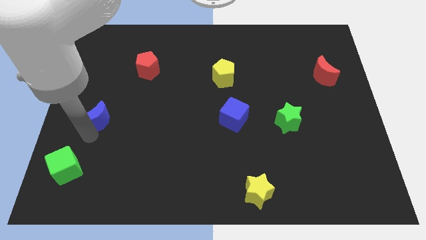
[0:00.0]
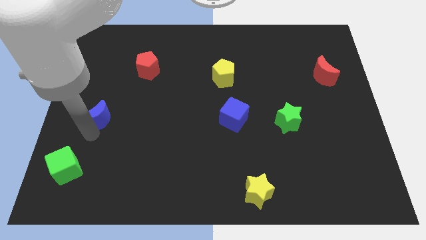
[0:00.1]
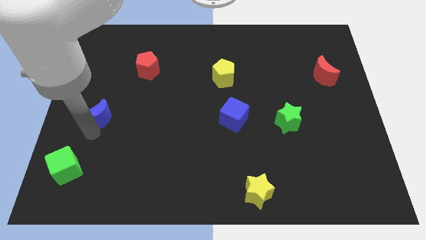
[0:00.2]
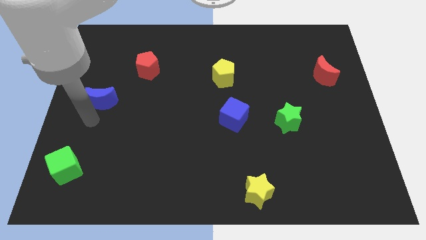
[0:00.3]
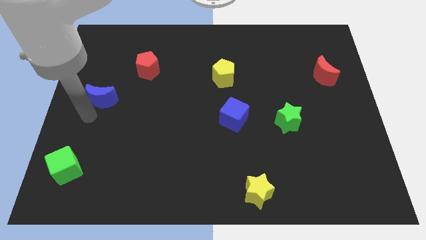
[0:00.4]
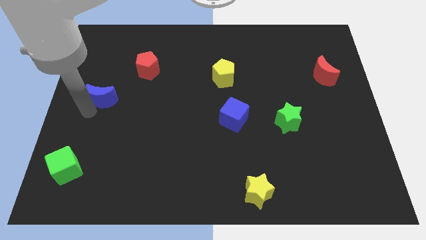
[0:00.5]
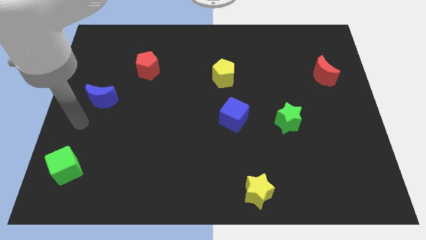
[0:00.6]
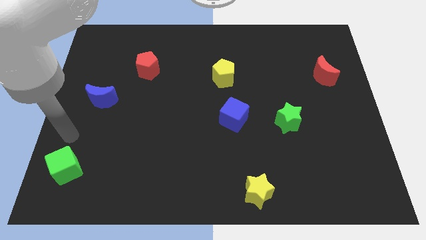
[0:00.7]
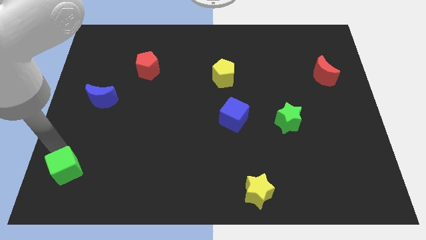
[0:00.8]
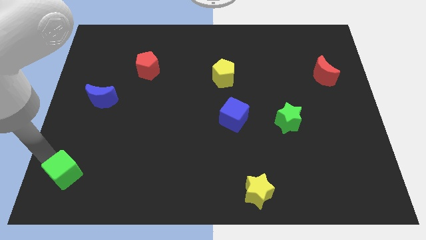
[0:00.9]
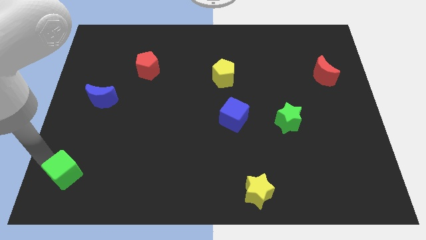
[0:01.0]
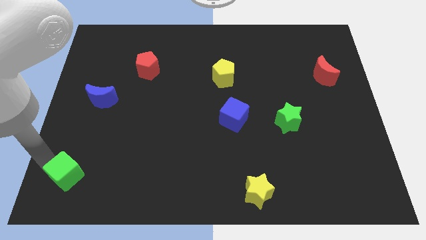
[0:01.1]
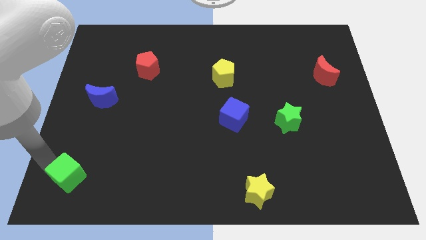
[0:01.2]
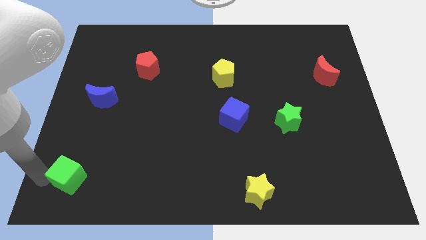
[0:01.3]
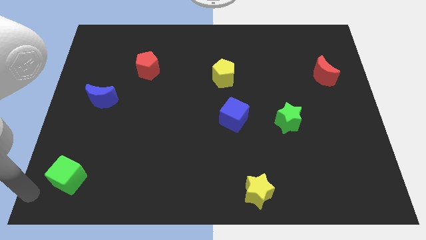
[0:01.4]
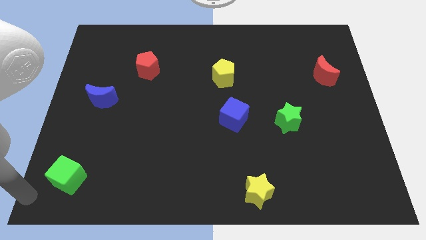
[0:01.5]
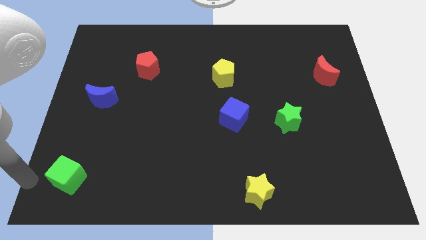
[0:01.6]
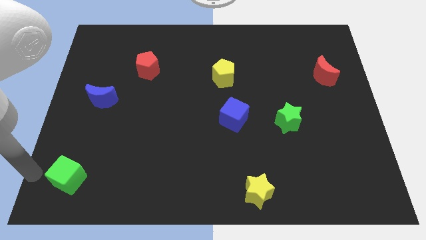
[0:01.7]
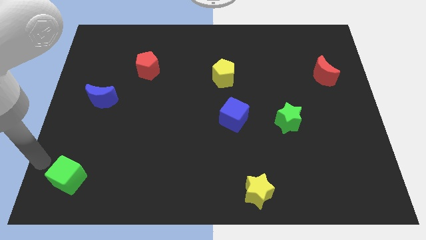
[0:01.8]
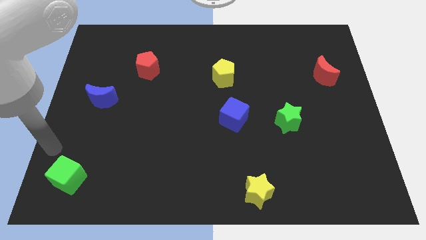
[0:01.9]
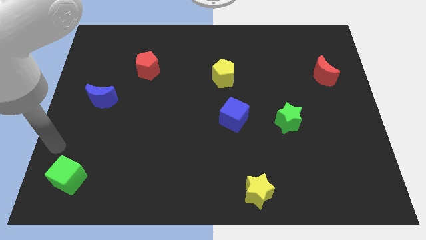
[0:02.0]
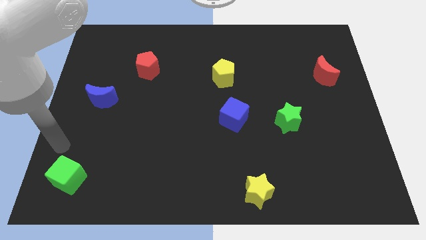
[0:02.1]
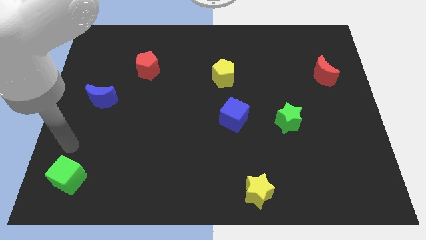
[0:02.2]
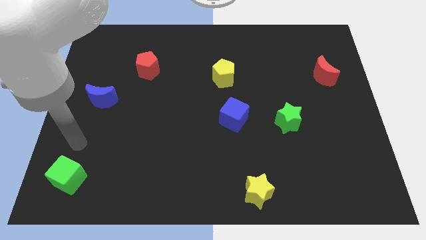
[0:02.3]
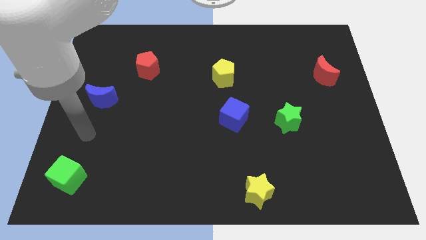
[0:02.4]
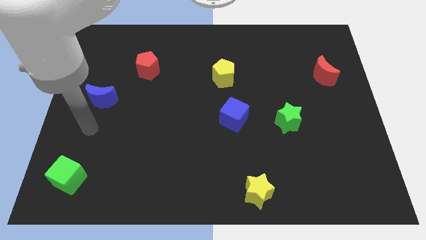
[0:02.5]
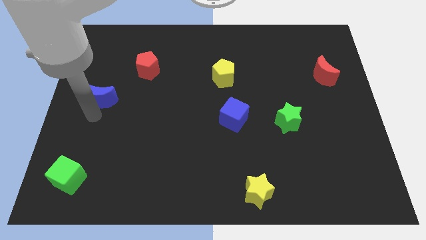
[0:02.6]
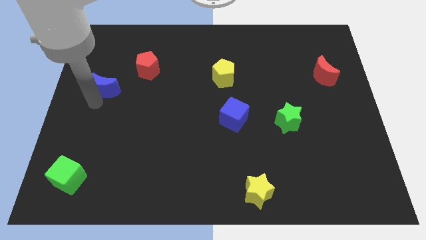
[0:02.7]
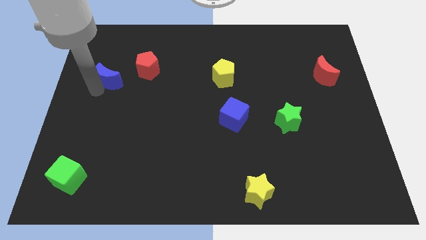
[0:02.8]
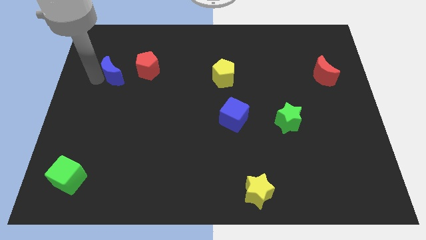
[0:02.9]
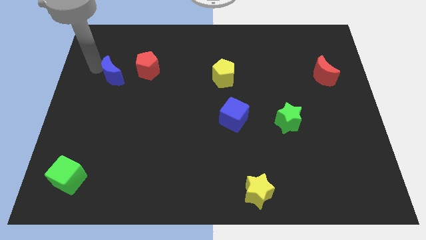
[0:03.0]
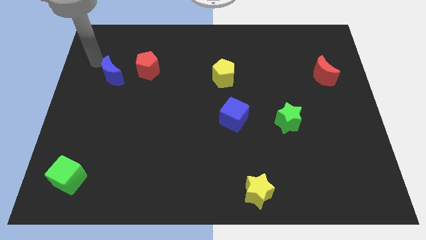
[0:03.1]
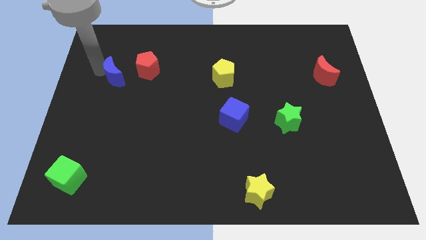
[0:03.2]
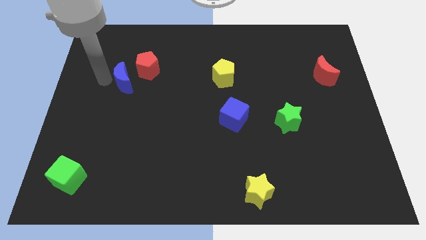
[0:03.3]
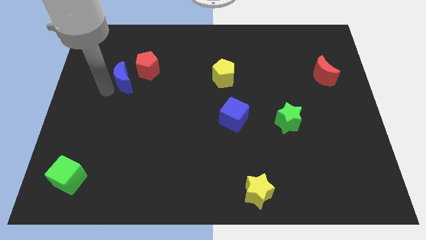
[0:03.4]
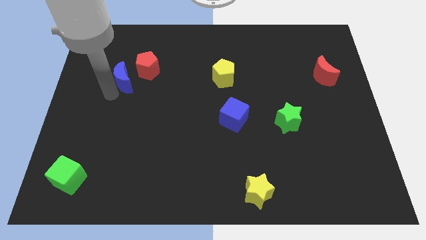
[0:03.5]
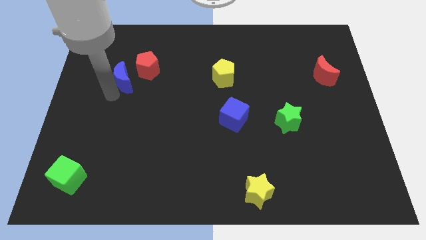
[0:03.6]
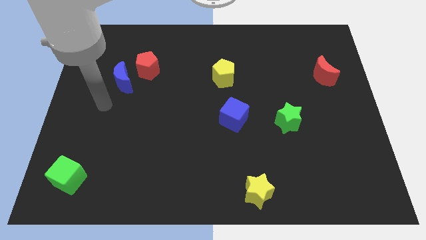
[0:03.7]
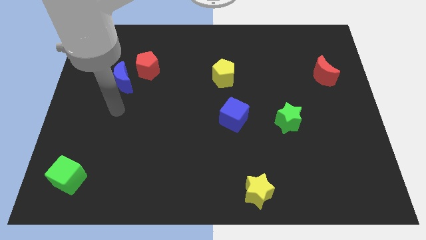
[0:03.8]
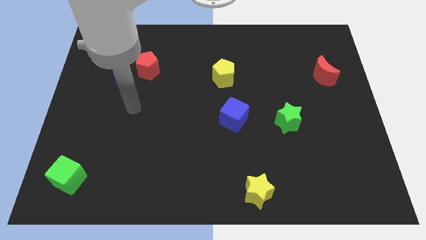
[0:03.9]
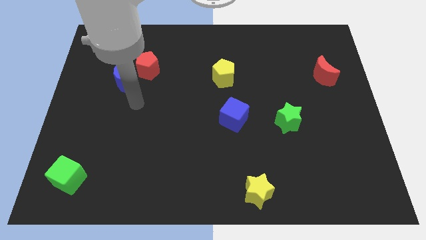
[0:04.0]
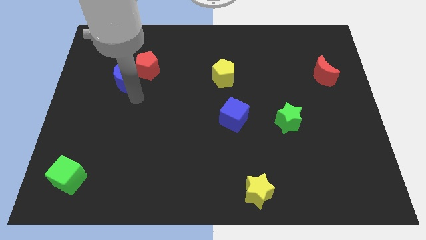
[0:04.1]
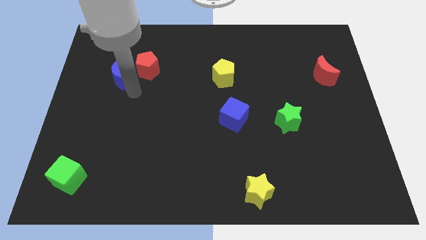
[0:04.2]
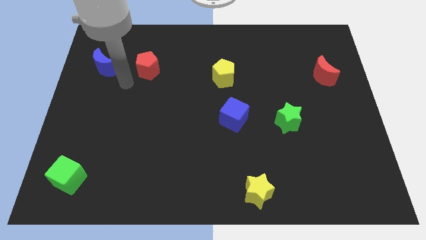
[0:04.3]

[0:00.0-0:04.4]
move the blue moon to the left of the red pentagon

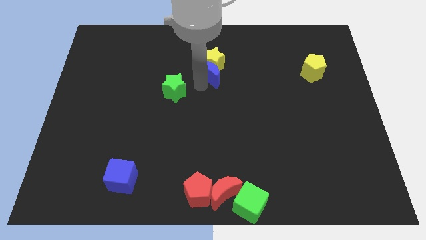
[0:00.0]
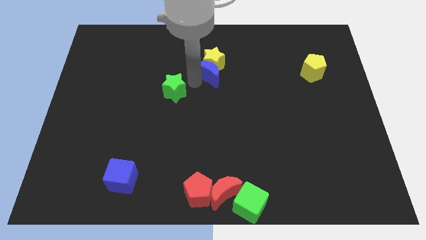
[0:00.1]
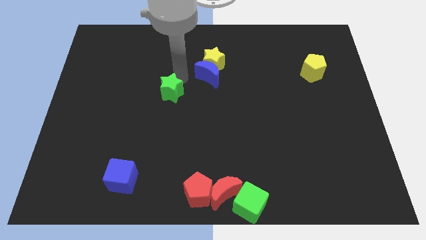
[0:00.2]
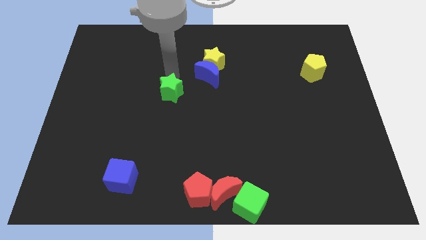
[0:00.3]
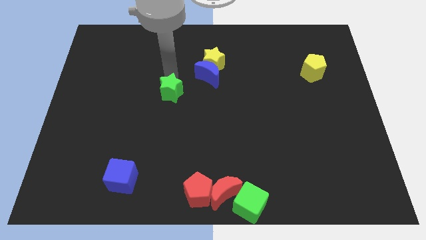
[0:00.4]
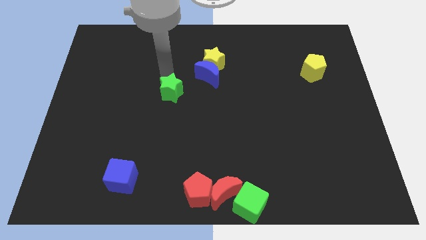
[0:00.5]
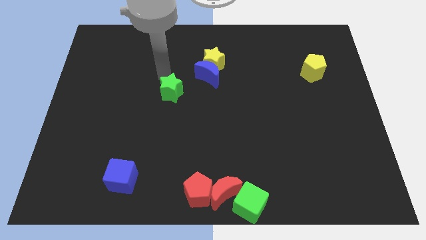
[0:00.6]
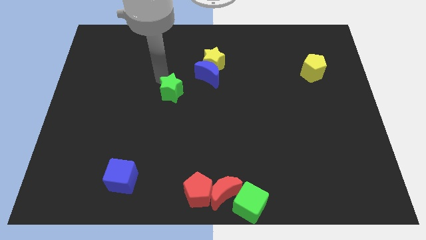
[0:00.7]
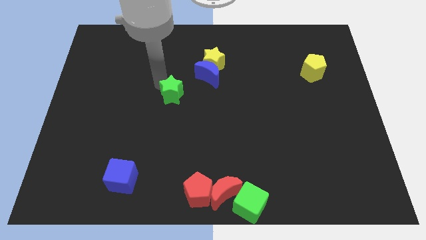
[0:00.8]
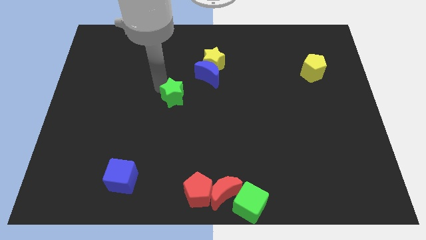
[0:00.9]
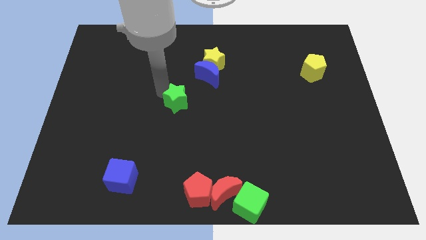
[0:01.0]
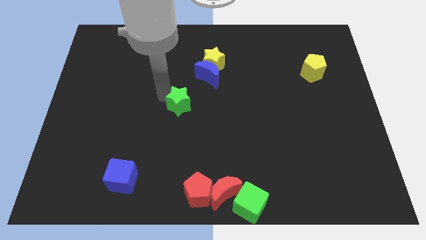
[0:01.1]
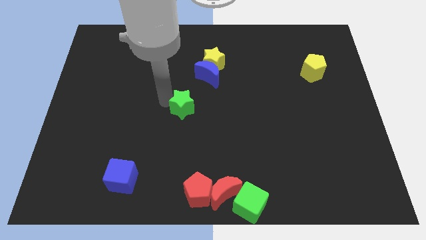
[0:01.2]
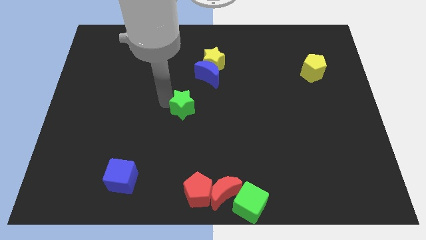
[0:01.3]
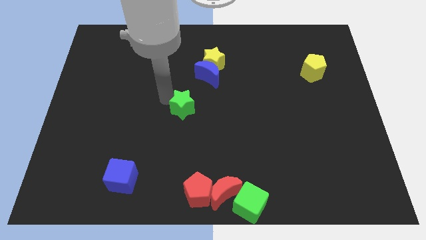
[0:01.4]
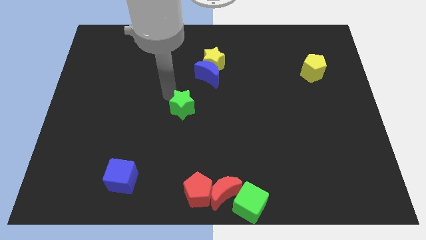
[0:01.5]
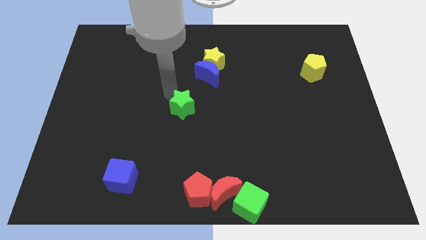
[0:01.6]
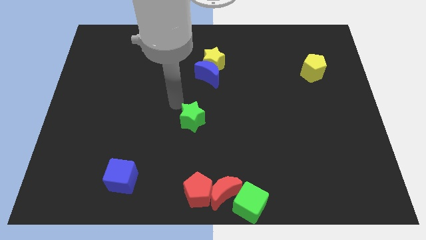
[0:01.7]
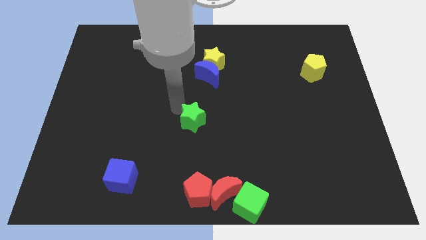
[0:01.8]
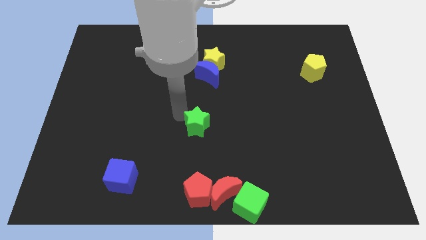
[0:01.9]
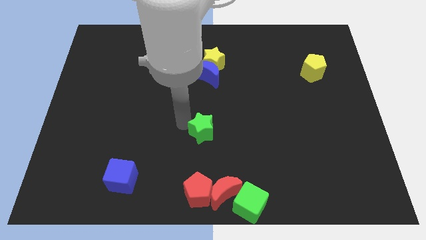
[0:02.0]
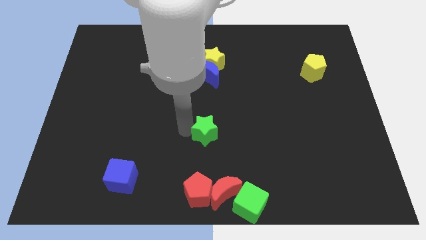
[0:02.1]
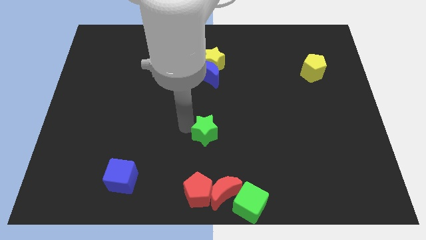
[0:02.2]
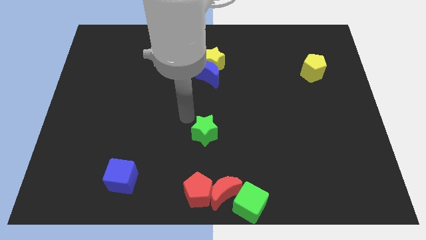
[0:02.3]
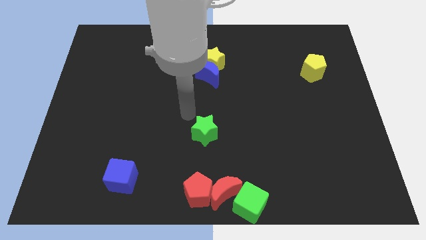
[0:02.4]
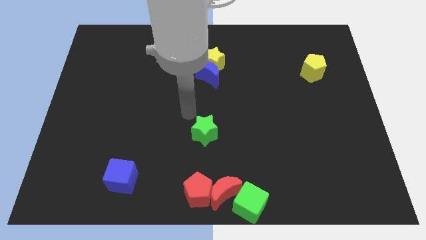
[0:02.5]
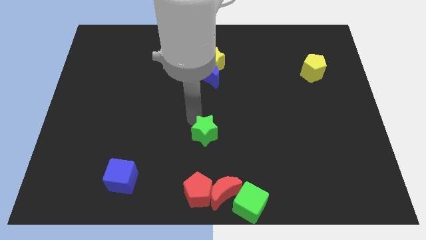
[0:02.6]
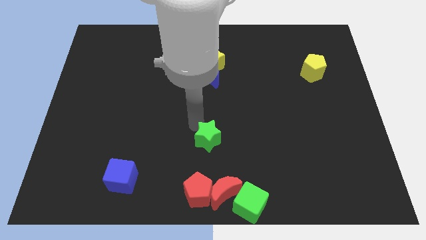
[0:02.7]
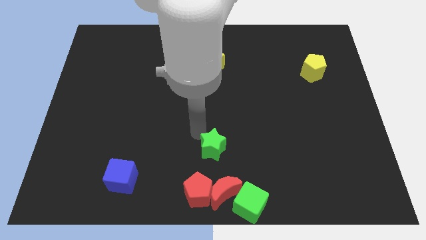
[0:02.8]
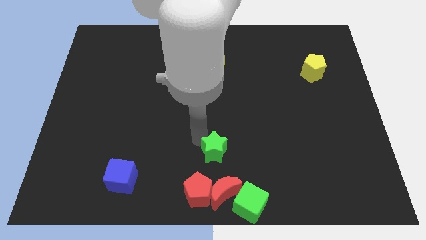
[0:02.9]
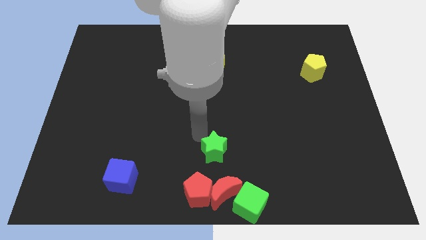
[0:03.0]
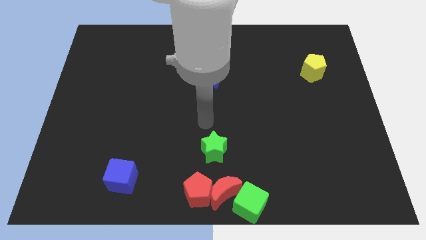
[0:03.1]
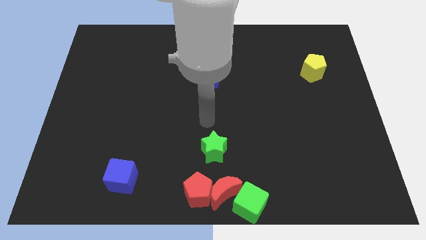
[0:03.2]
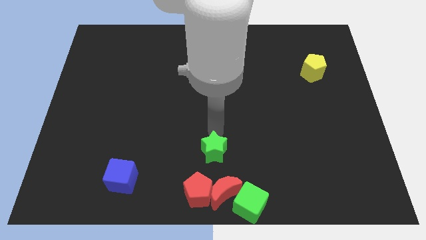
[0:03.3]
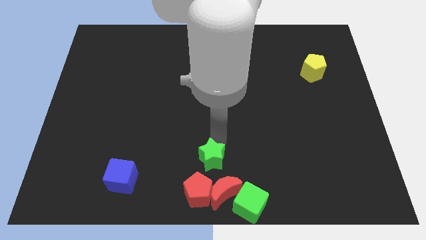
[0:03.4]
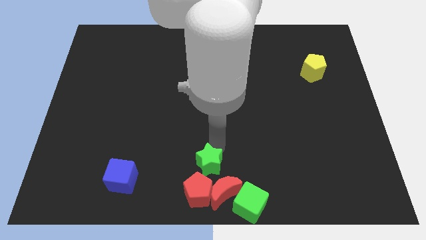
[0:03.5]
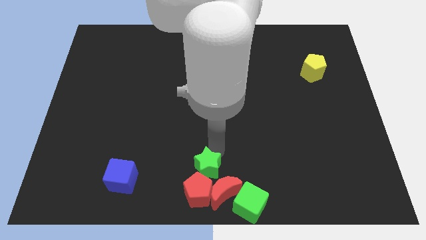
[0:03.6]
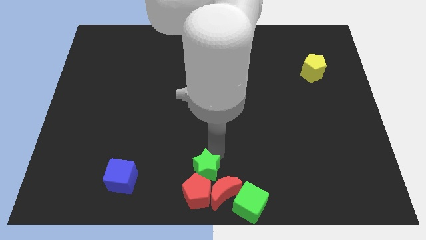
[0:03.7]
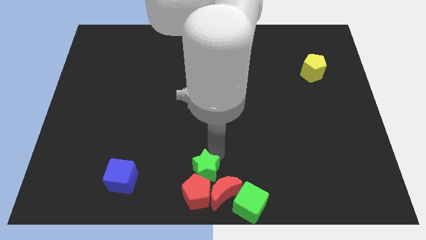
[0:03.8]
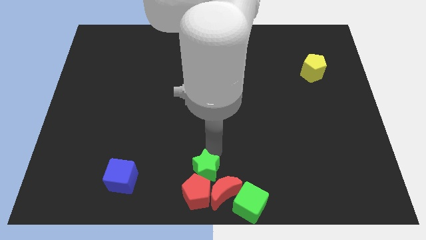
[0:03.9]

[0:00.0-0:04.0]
push the green star to the top of the red pentagon

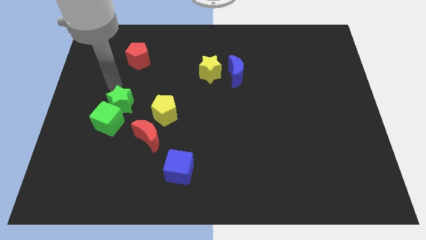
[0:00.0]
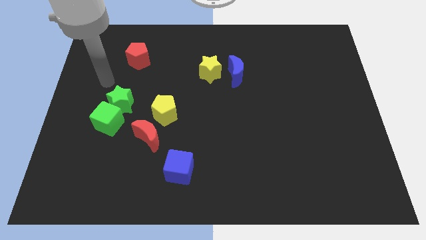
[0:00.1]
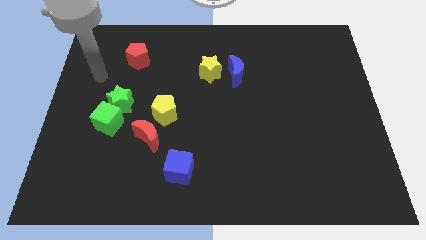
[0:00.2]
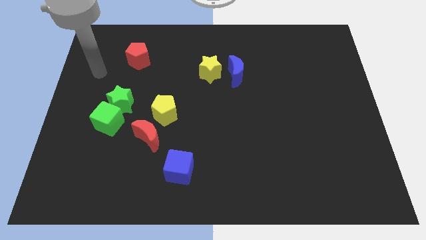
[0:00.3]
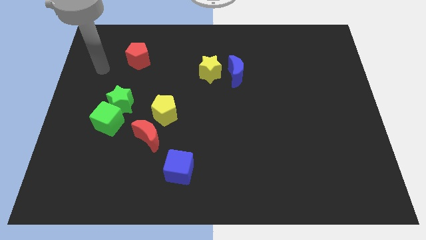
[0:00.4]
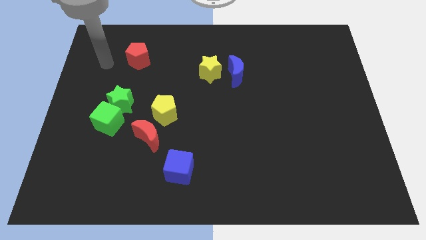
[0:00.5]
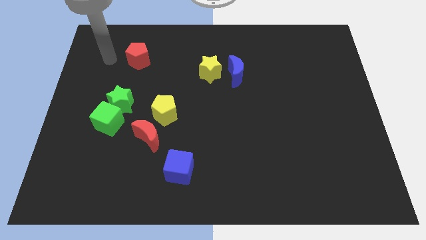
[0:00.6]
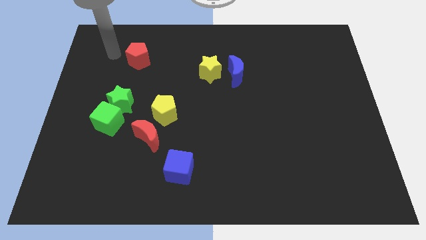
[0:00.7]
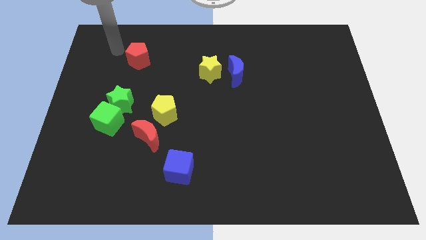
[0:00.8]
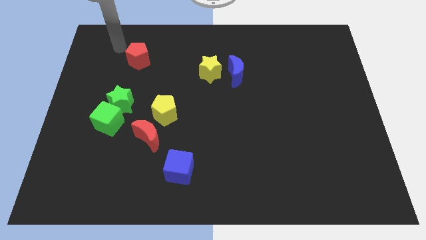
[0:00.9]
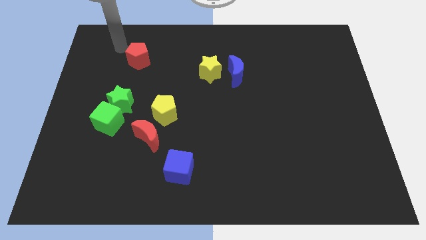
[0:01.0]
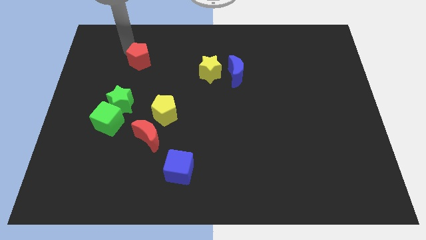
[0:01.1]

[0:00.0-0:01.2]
put arm near red pentagon
